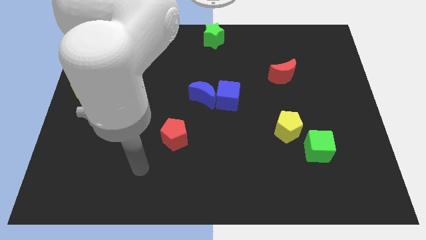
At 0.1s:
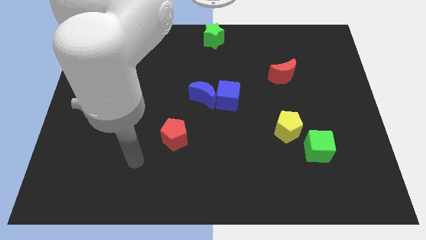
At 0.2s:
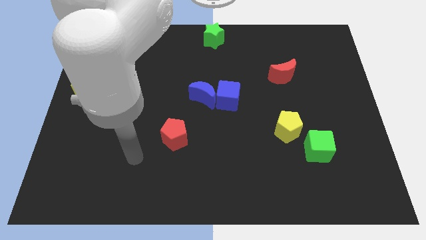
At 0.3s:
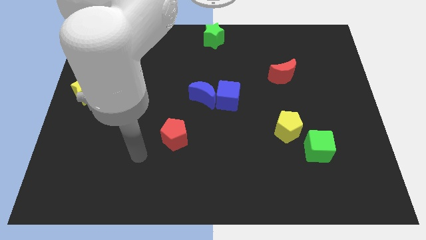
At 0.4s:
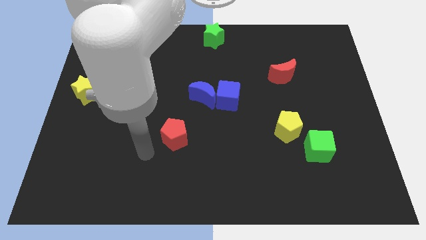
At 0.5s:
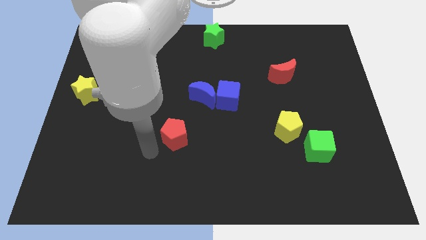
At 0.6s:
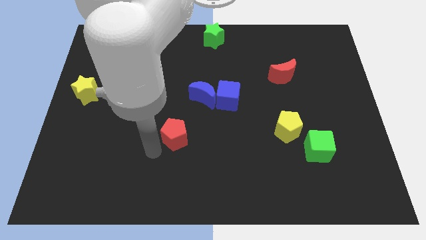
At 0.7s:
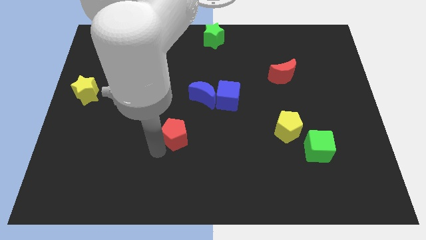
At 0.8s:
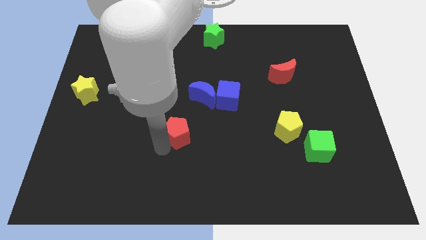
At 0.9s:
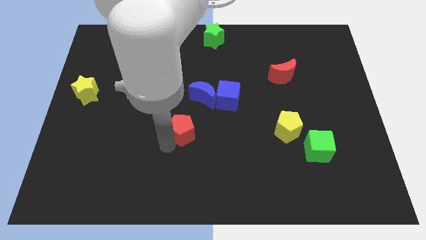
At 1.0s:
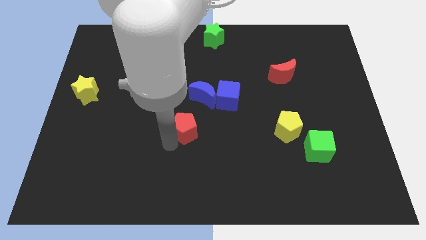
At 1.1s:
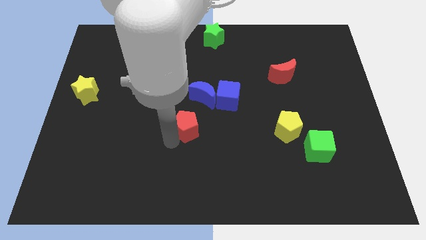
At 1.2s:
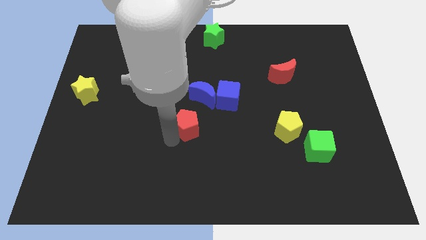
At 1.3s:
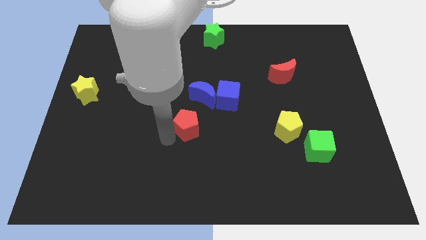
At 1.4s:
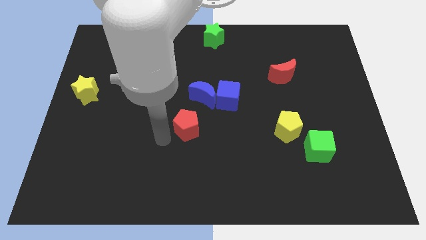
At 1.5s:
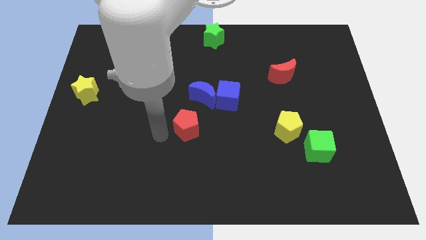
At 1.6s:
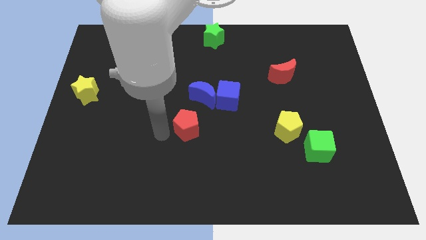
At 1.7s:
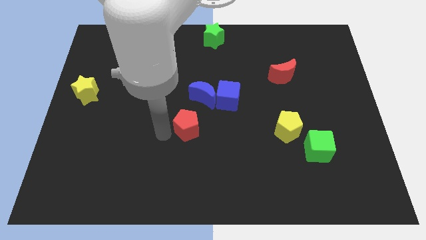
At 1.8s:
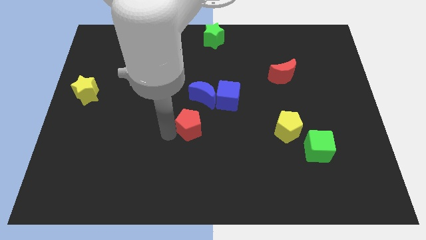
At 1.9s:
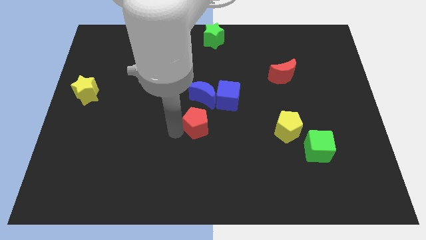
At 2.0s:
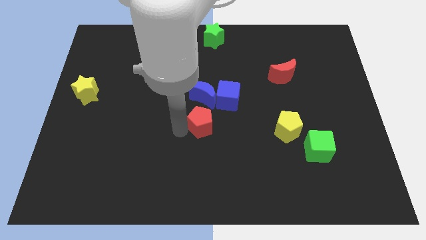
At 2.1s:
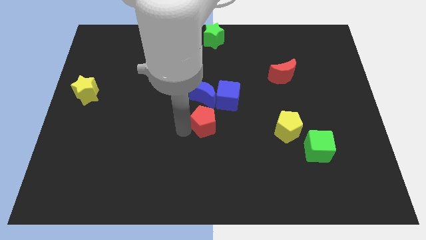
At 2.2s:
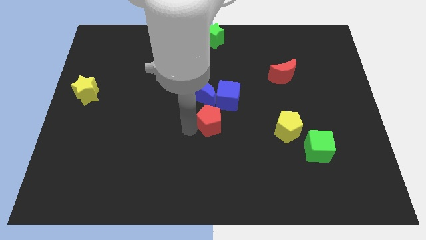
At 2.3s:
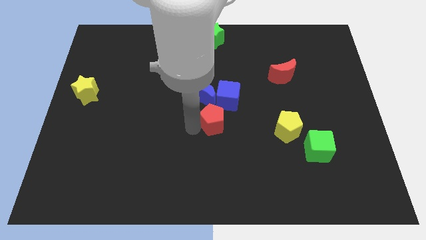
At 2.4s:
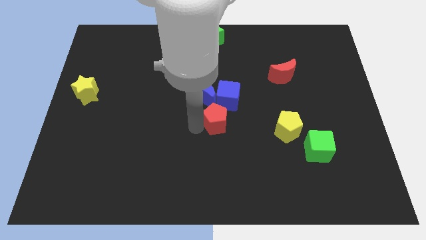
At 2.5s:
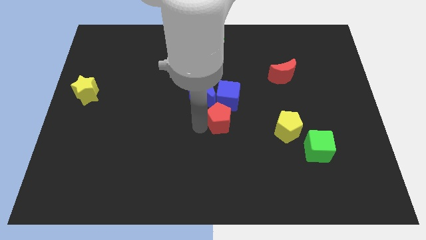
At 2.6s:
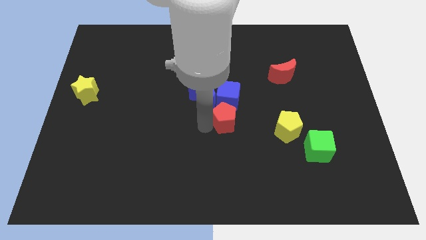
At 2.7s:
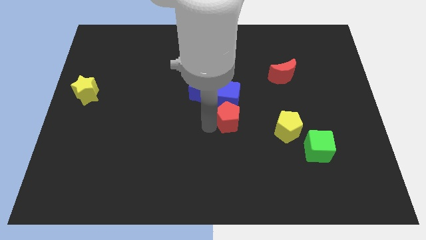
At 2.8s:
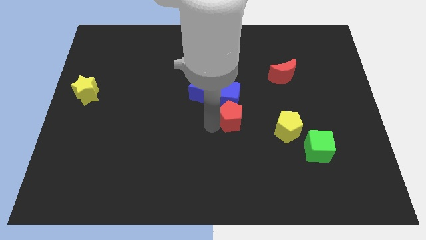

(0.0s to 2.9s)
place the red pentagon down to the blue cube

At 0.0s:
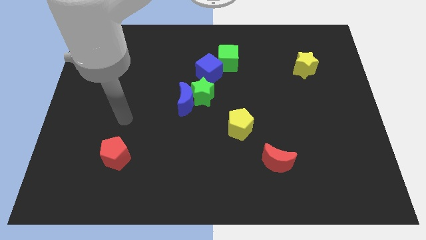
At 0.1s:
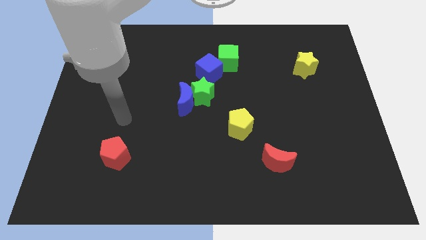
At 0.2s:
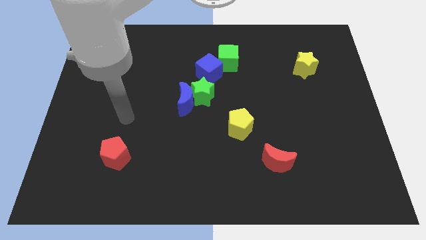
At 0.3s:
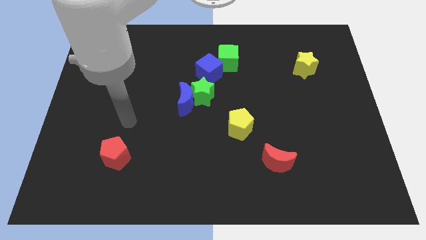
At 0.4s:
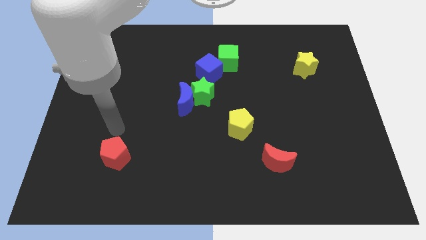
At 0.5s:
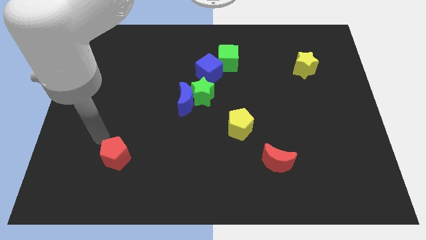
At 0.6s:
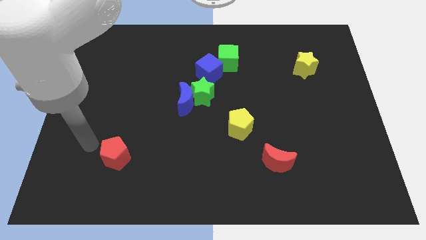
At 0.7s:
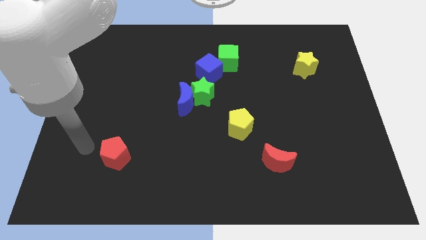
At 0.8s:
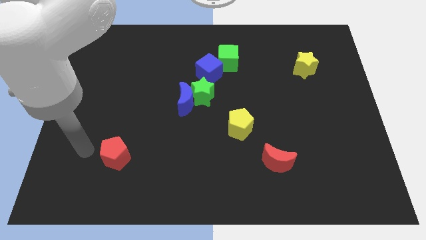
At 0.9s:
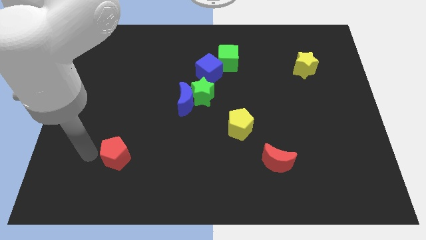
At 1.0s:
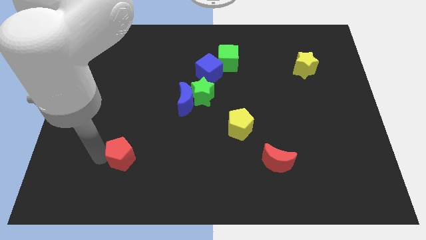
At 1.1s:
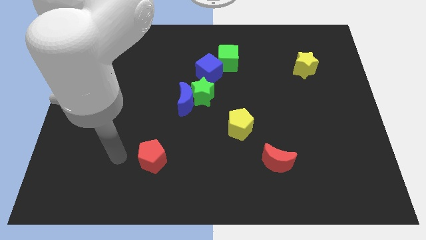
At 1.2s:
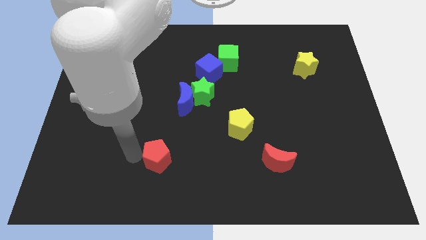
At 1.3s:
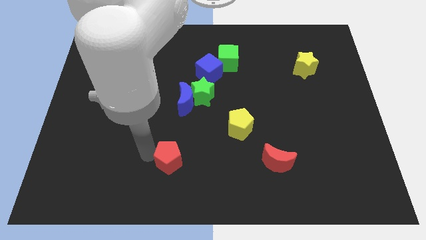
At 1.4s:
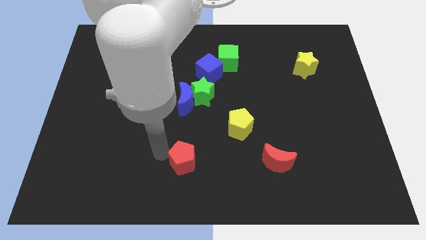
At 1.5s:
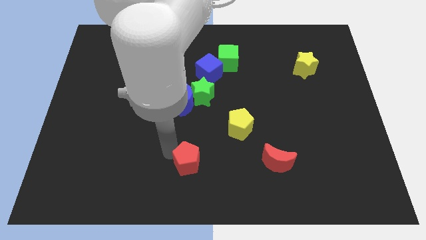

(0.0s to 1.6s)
move the red pentagon vertically below the blue moon

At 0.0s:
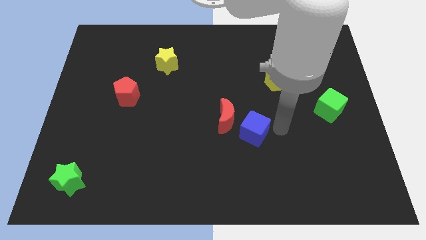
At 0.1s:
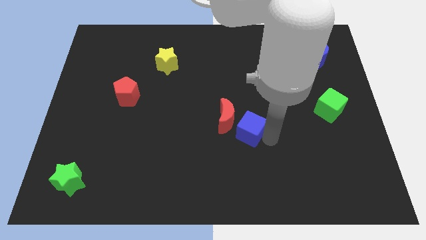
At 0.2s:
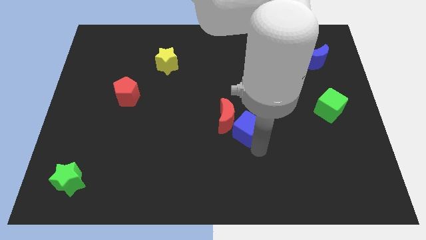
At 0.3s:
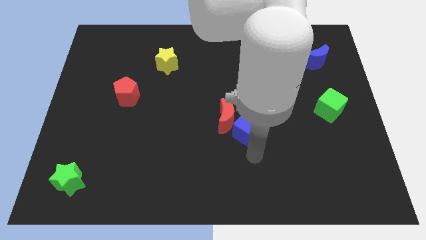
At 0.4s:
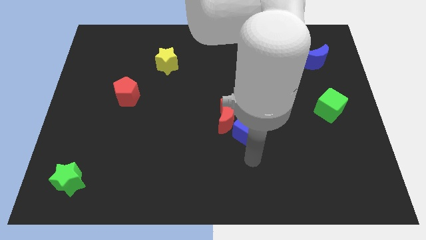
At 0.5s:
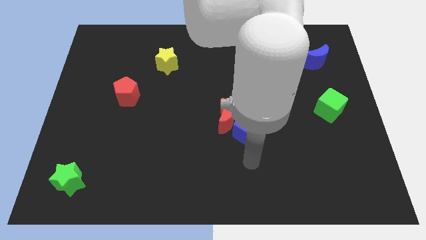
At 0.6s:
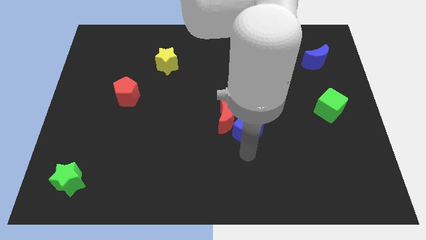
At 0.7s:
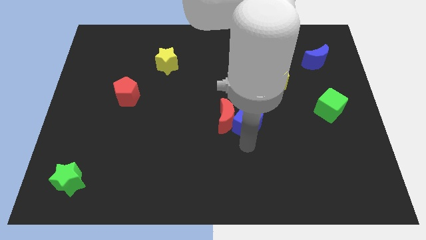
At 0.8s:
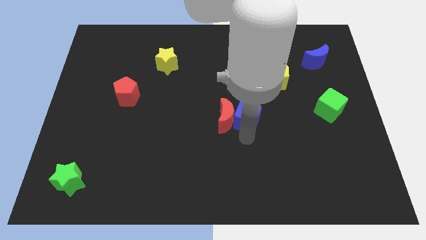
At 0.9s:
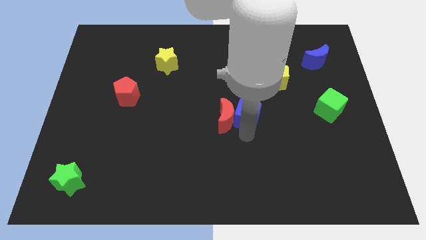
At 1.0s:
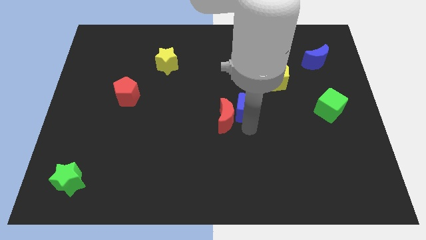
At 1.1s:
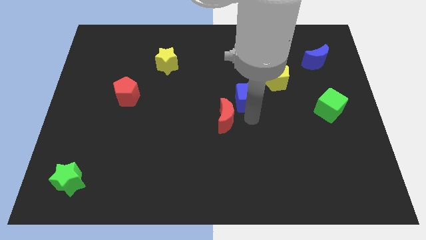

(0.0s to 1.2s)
move blue cube right above the red moon

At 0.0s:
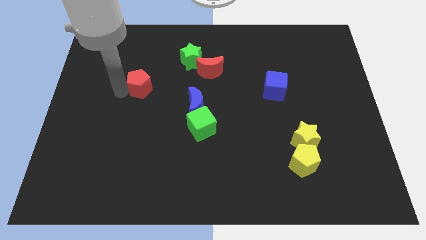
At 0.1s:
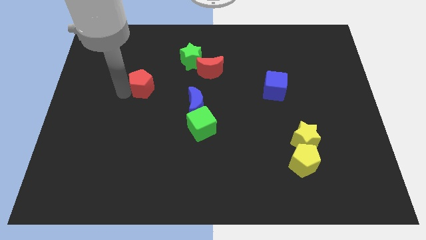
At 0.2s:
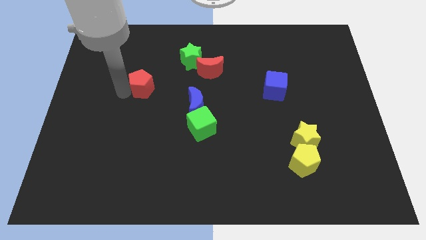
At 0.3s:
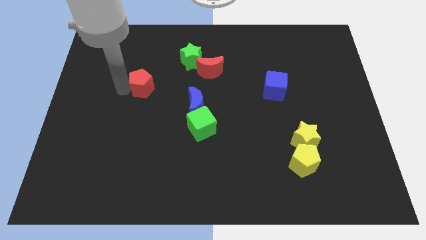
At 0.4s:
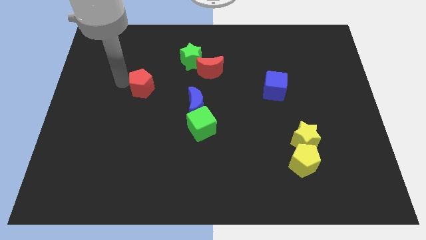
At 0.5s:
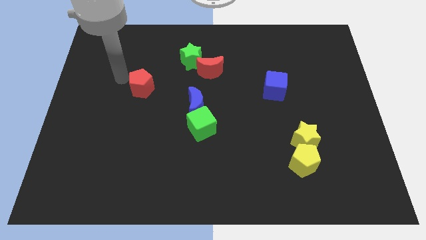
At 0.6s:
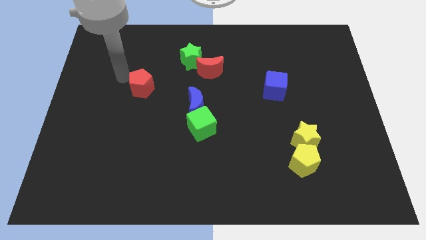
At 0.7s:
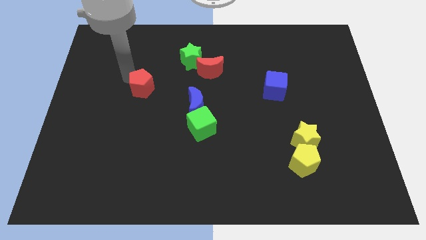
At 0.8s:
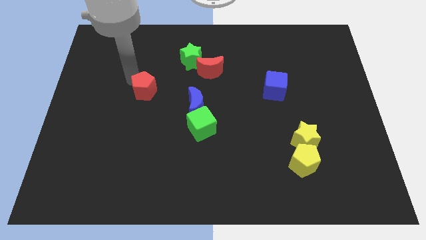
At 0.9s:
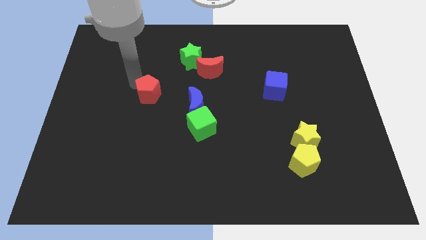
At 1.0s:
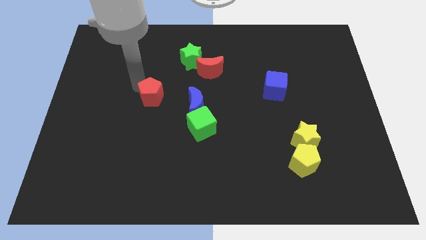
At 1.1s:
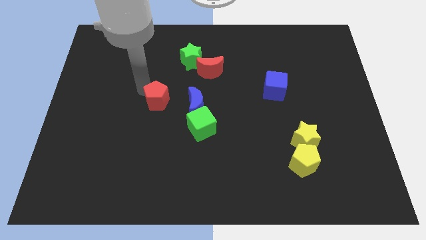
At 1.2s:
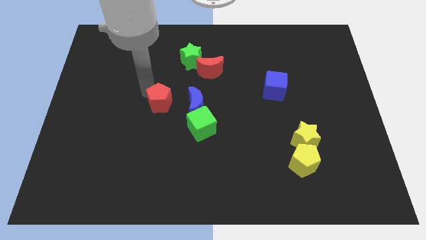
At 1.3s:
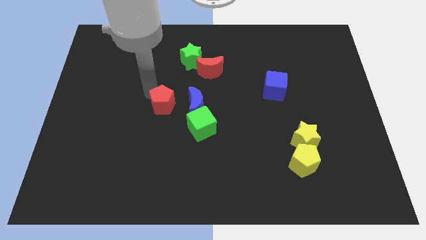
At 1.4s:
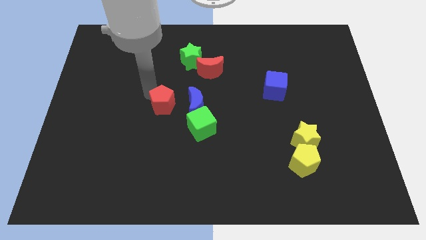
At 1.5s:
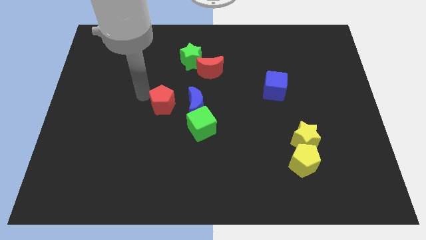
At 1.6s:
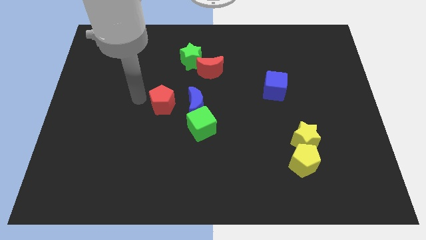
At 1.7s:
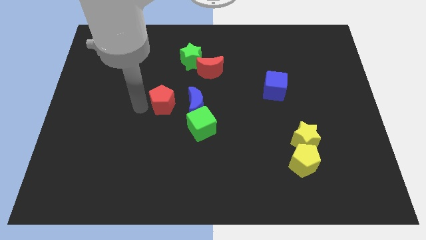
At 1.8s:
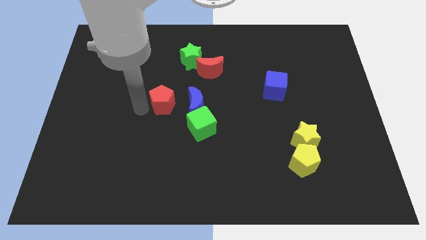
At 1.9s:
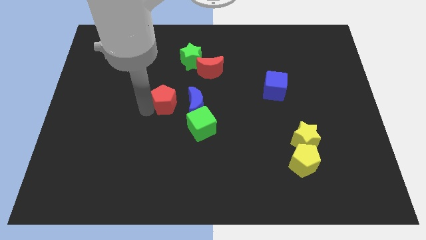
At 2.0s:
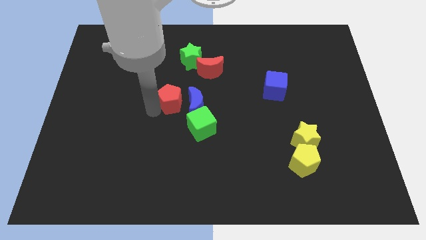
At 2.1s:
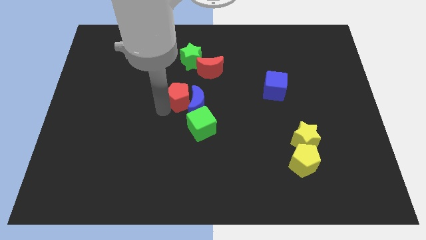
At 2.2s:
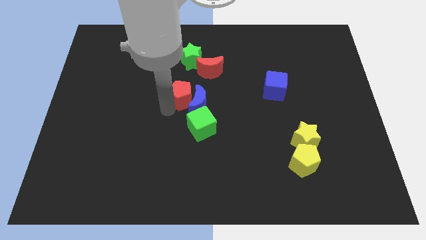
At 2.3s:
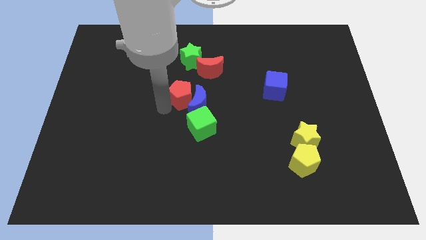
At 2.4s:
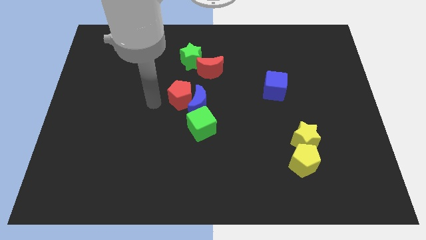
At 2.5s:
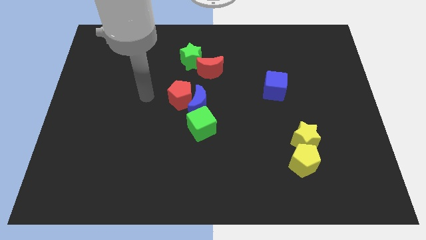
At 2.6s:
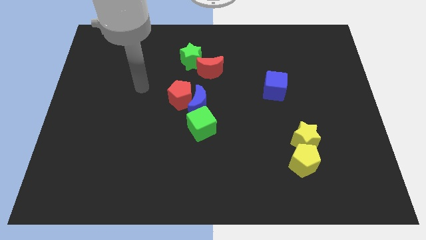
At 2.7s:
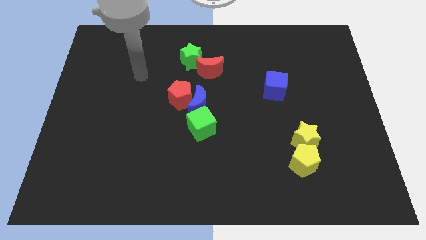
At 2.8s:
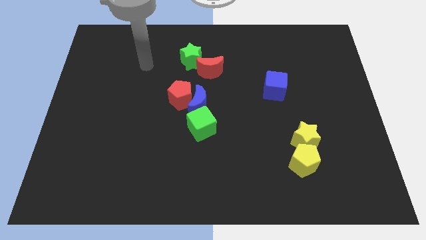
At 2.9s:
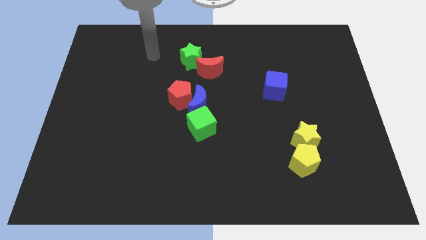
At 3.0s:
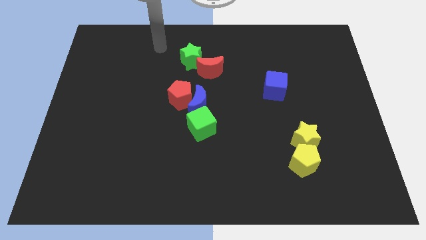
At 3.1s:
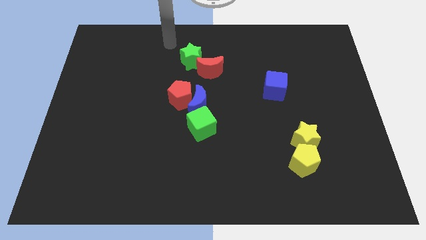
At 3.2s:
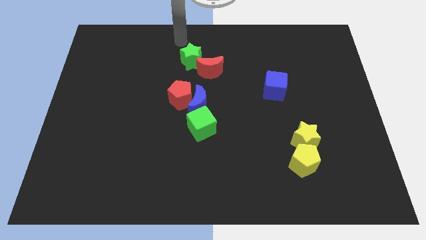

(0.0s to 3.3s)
place the red pentagon to the left of the blue crescent
